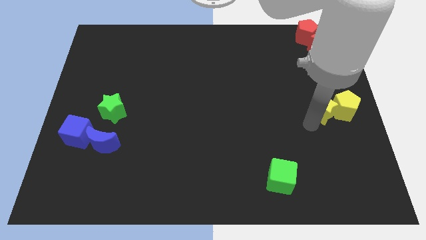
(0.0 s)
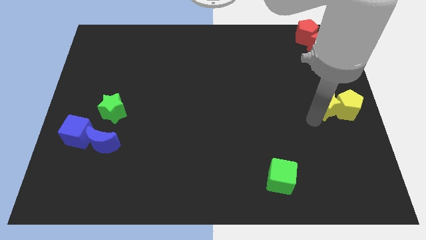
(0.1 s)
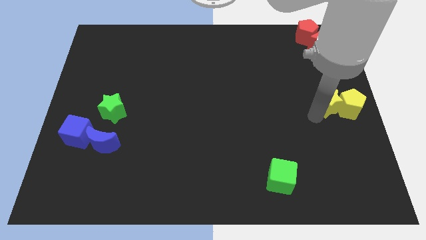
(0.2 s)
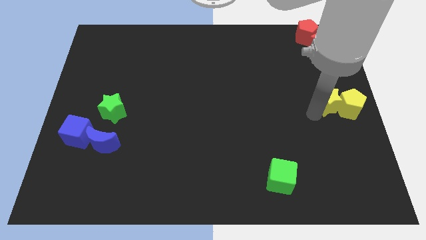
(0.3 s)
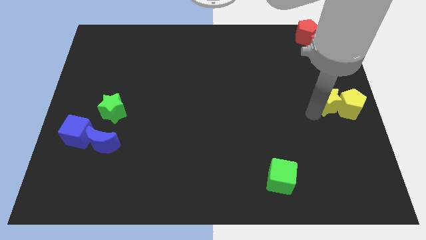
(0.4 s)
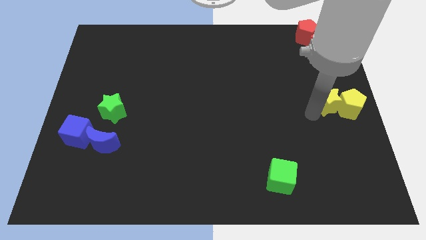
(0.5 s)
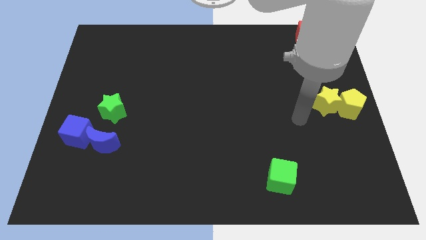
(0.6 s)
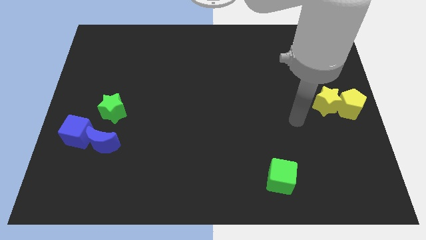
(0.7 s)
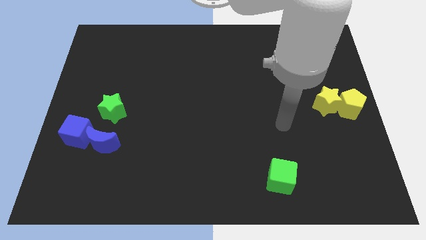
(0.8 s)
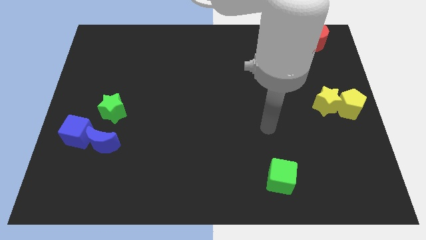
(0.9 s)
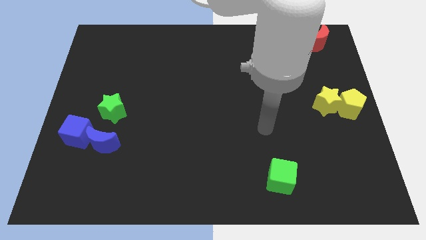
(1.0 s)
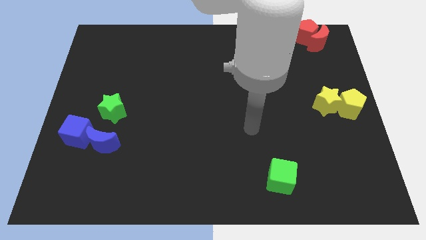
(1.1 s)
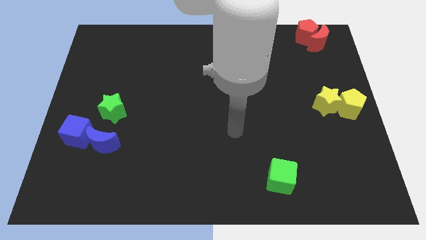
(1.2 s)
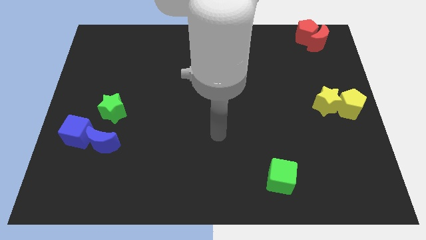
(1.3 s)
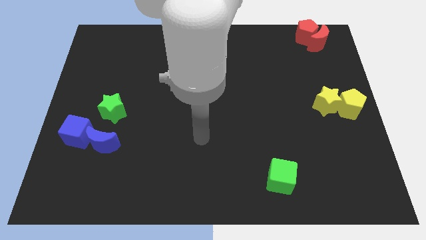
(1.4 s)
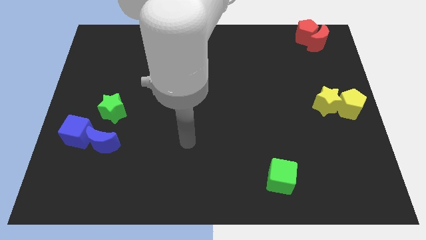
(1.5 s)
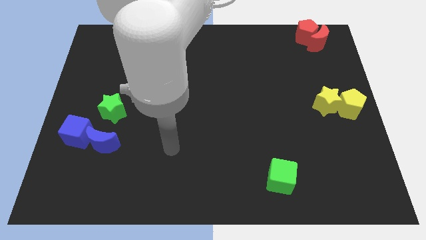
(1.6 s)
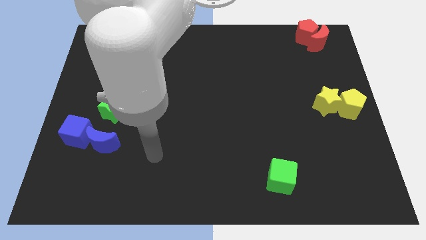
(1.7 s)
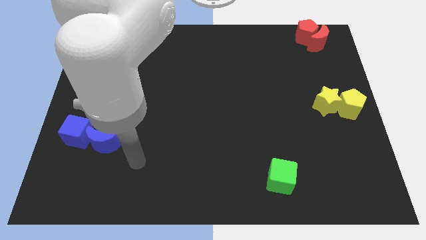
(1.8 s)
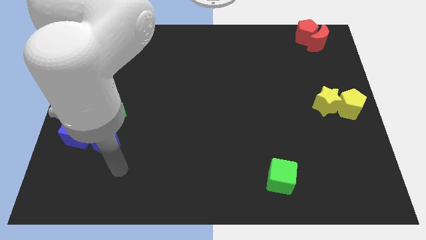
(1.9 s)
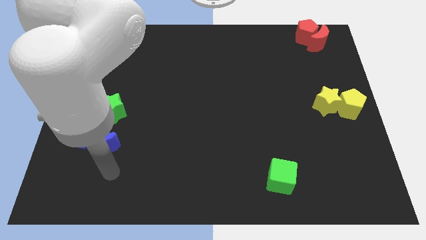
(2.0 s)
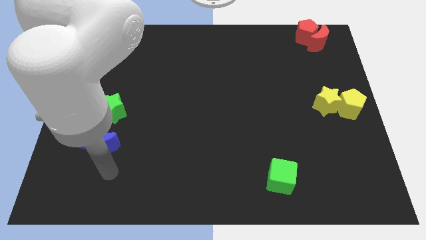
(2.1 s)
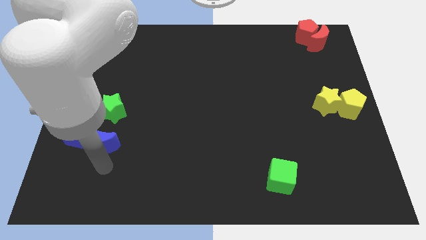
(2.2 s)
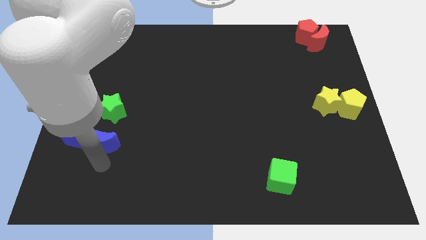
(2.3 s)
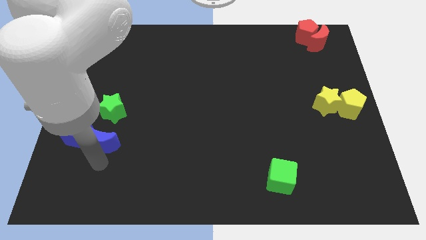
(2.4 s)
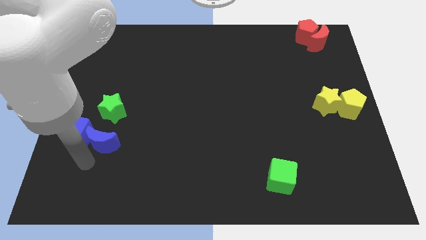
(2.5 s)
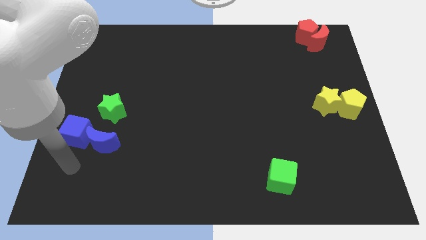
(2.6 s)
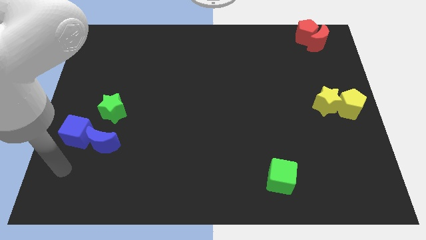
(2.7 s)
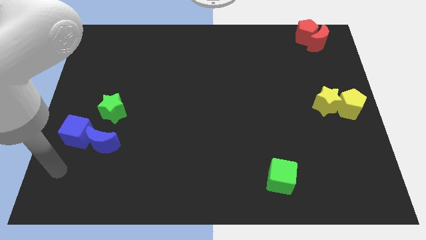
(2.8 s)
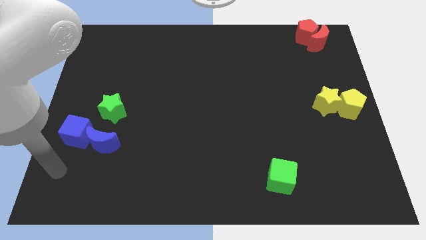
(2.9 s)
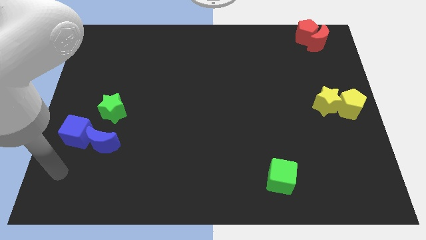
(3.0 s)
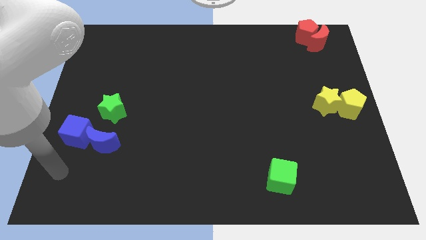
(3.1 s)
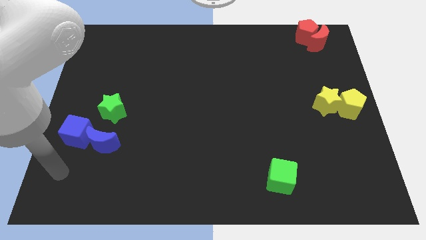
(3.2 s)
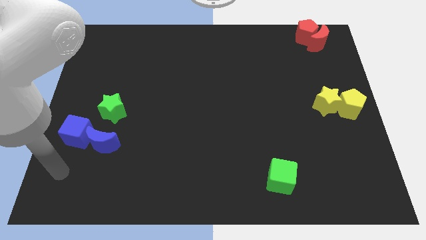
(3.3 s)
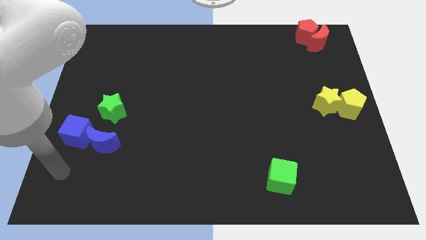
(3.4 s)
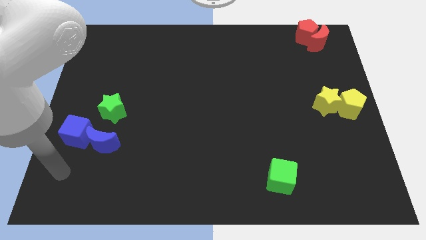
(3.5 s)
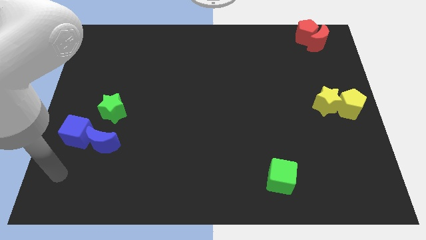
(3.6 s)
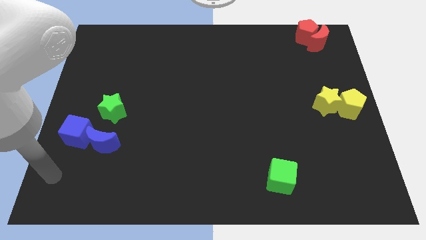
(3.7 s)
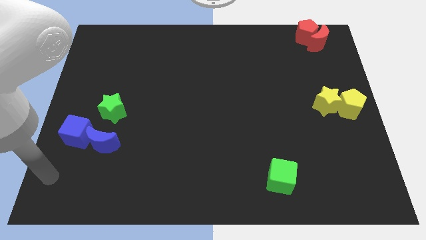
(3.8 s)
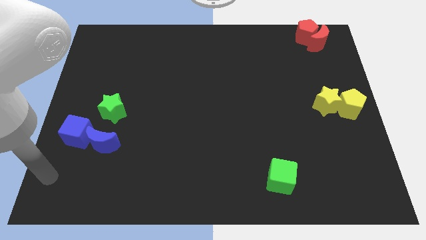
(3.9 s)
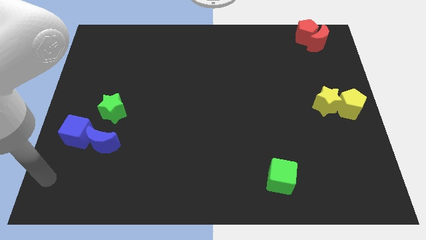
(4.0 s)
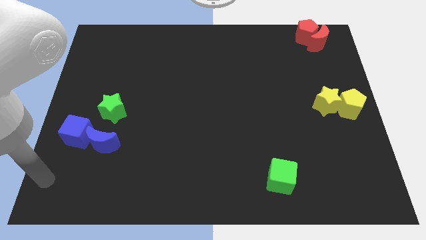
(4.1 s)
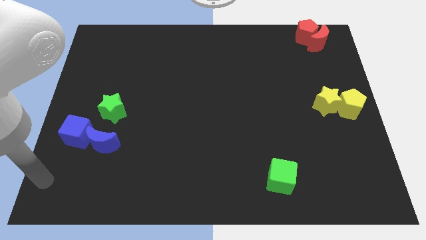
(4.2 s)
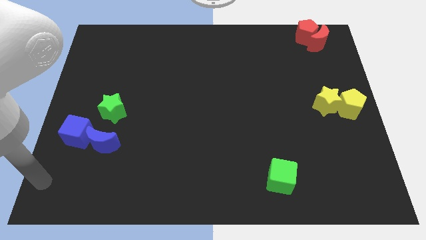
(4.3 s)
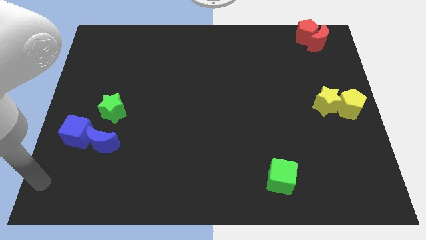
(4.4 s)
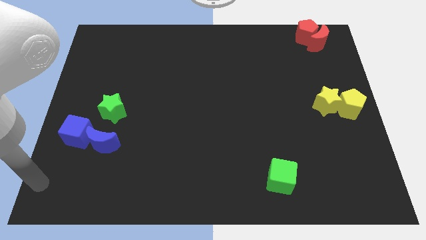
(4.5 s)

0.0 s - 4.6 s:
move your arm away from the yellow star

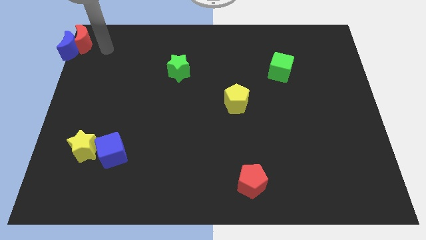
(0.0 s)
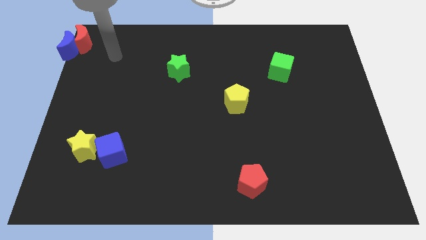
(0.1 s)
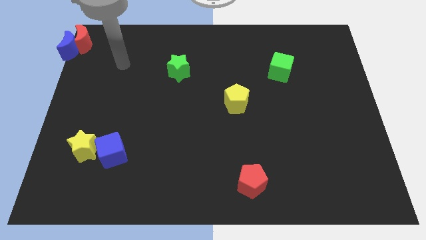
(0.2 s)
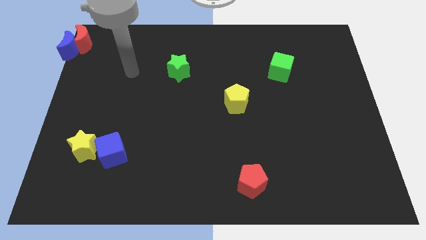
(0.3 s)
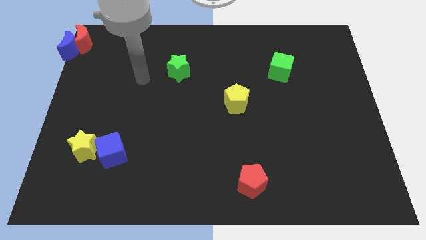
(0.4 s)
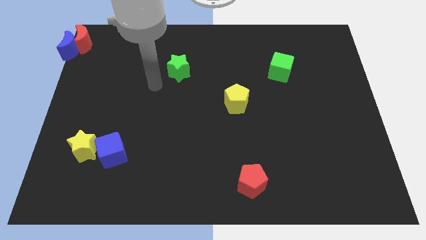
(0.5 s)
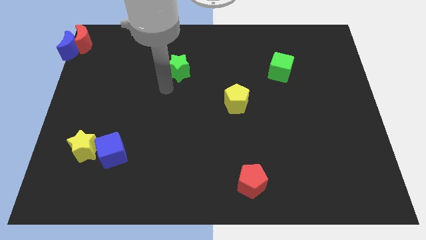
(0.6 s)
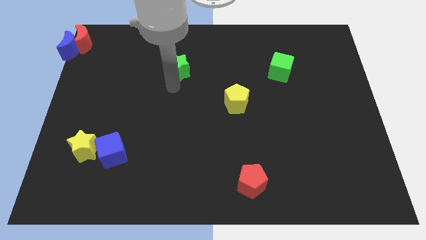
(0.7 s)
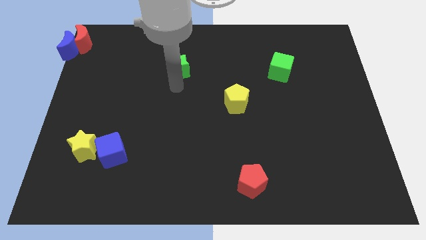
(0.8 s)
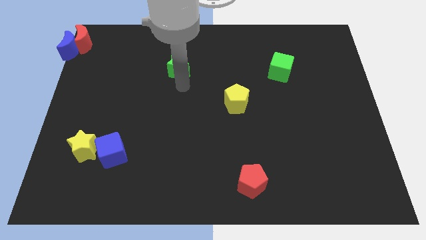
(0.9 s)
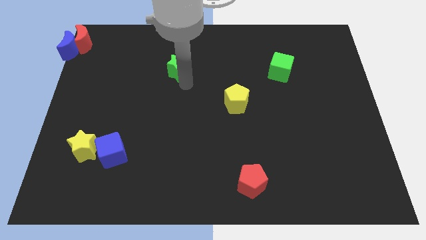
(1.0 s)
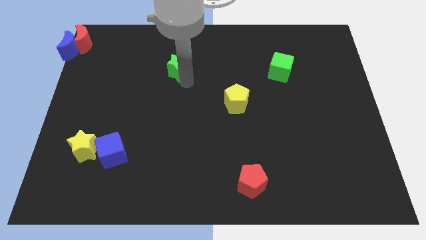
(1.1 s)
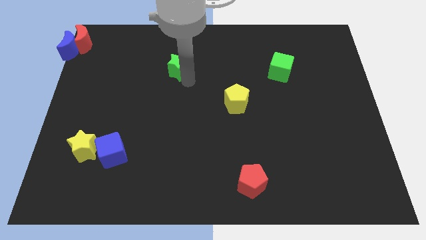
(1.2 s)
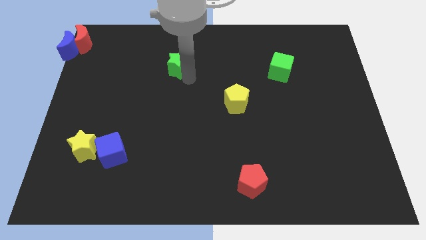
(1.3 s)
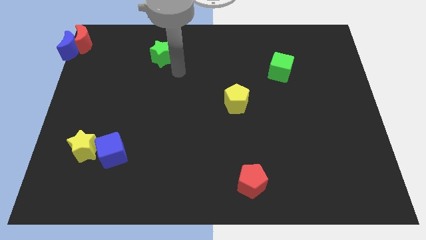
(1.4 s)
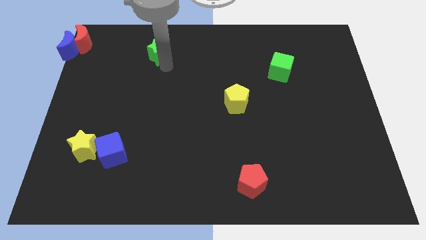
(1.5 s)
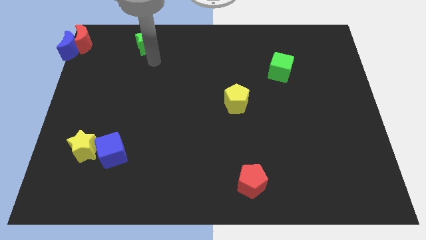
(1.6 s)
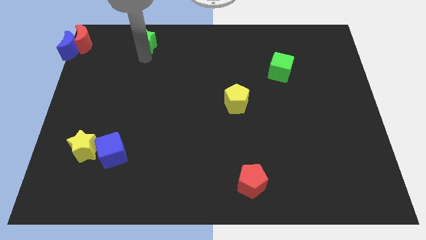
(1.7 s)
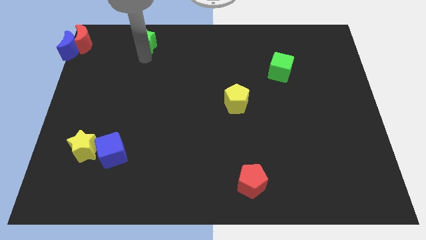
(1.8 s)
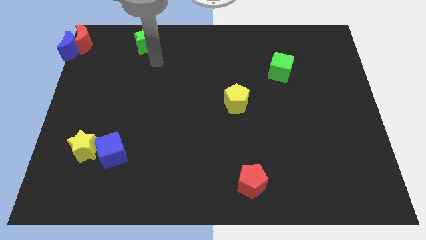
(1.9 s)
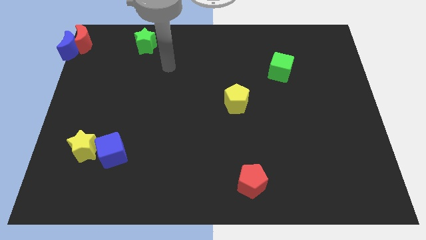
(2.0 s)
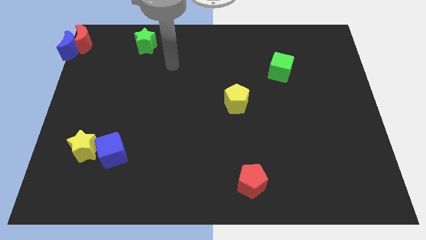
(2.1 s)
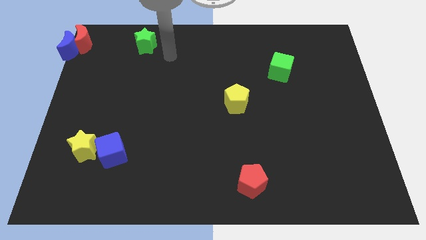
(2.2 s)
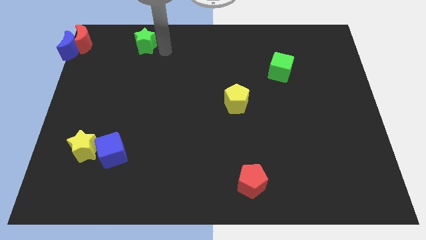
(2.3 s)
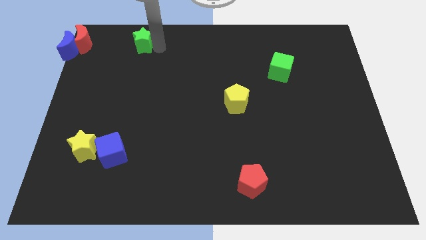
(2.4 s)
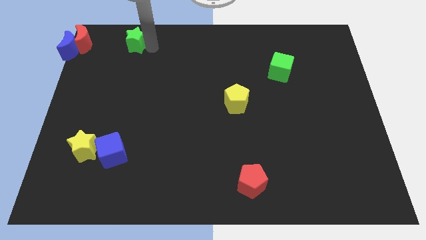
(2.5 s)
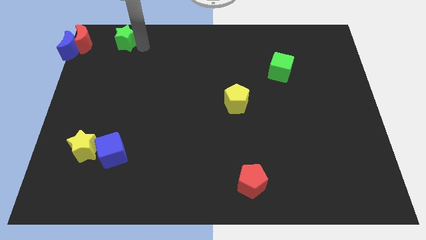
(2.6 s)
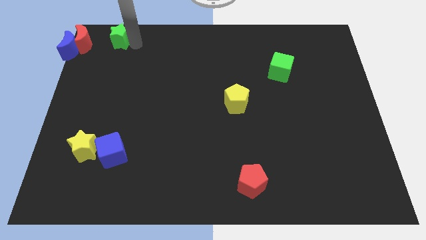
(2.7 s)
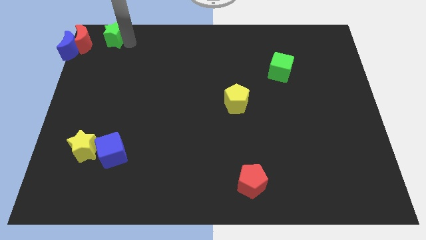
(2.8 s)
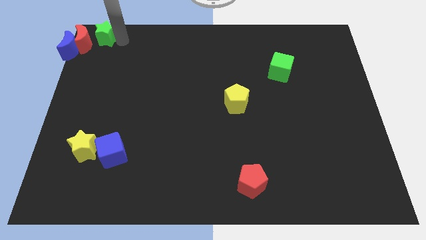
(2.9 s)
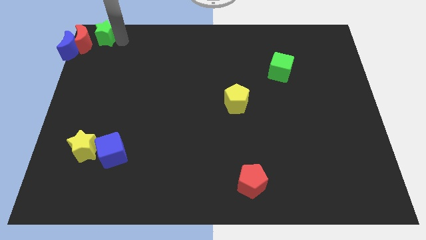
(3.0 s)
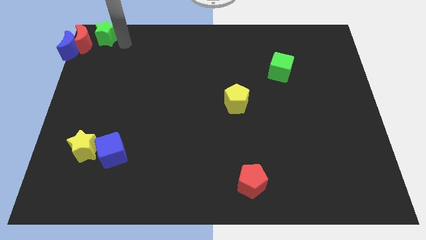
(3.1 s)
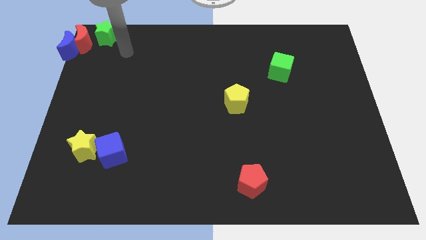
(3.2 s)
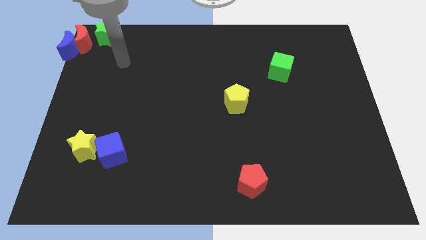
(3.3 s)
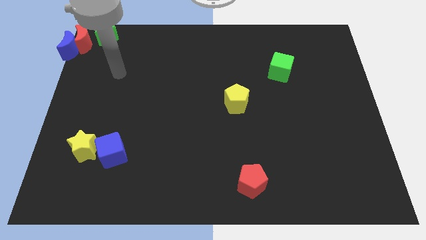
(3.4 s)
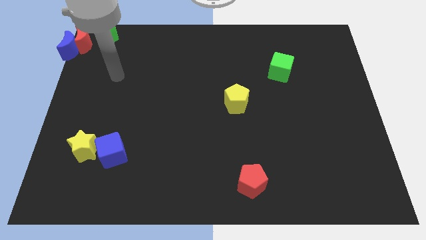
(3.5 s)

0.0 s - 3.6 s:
put the green star at the top left center

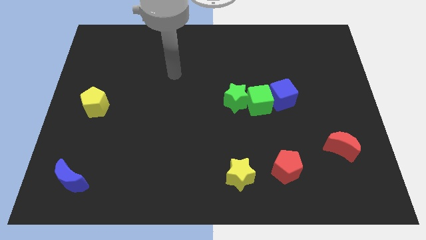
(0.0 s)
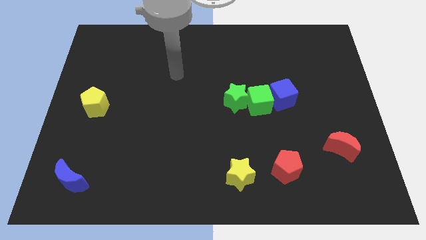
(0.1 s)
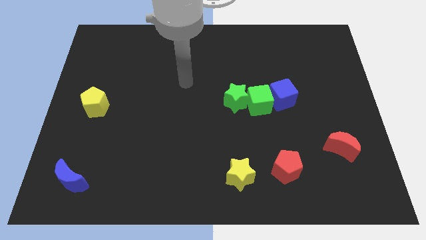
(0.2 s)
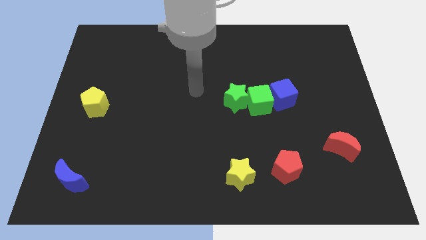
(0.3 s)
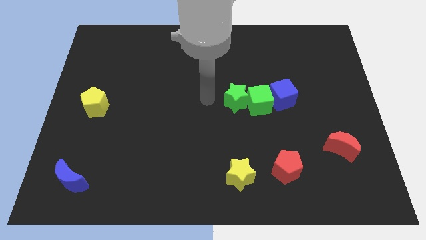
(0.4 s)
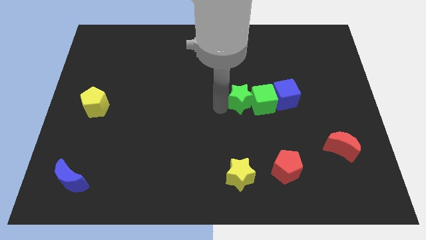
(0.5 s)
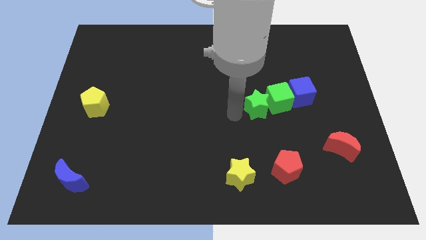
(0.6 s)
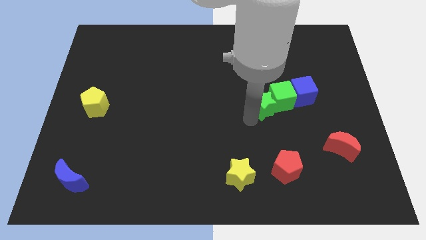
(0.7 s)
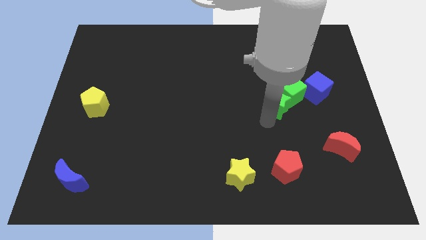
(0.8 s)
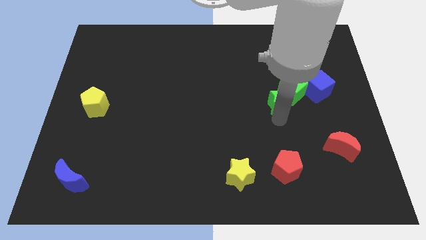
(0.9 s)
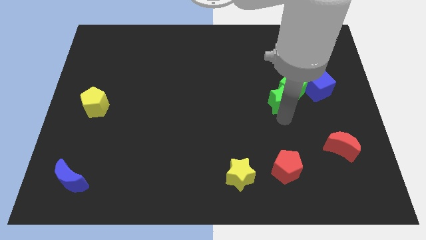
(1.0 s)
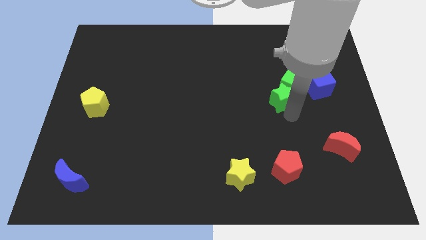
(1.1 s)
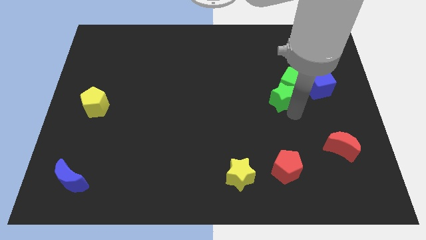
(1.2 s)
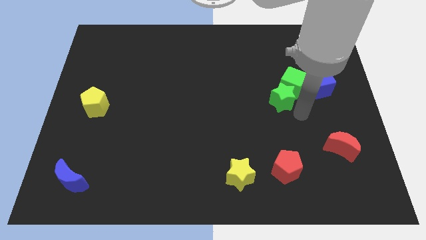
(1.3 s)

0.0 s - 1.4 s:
push the group of green blocks towards the top
